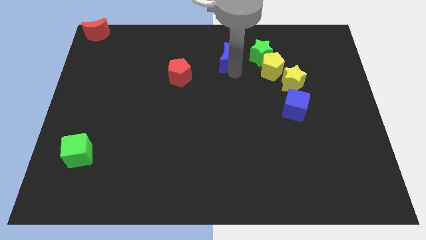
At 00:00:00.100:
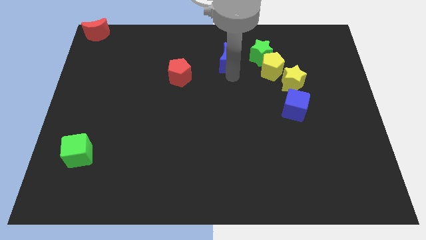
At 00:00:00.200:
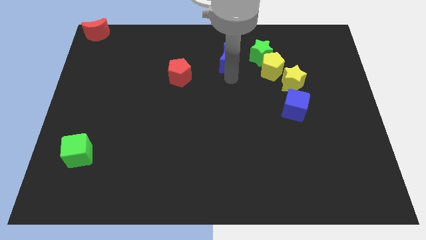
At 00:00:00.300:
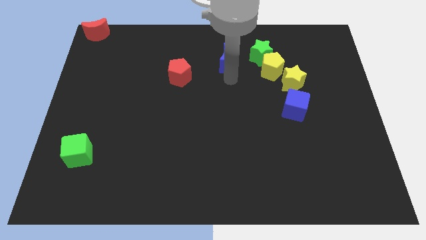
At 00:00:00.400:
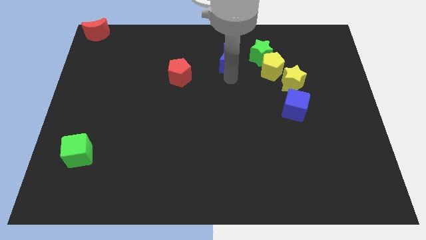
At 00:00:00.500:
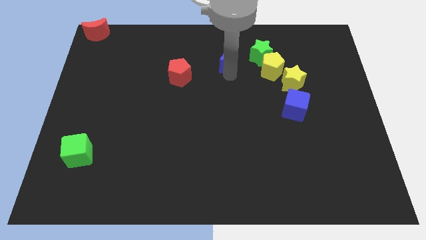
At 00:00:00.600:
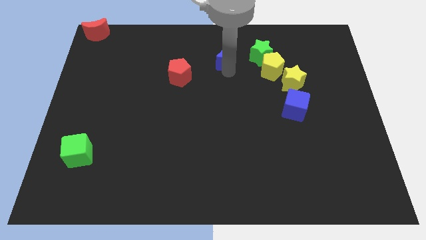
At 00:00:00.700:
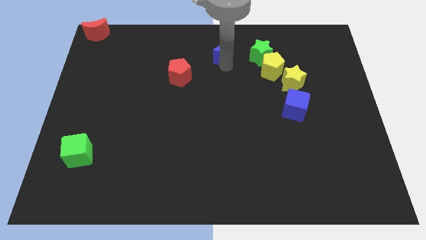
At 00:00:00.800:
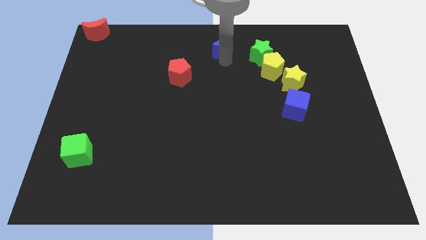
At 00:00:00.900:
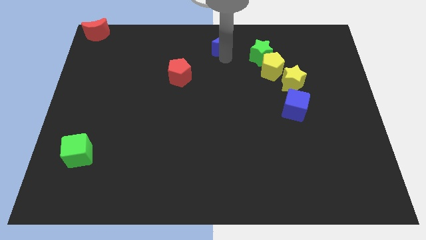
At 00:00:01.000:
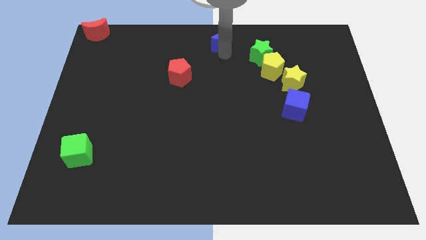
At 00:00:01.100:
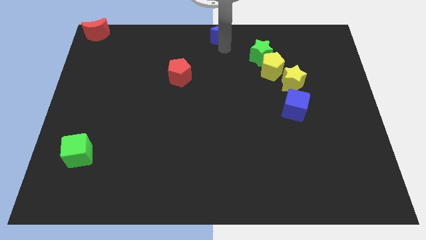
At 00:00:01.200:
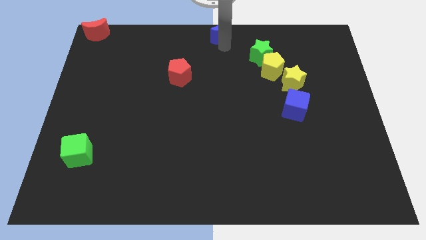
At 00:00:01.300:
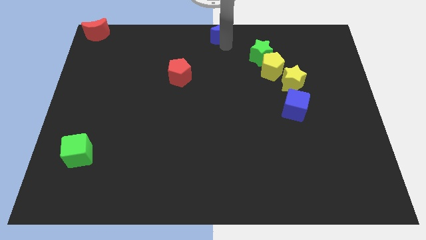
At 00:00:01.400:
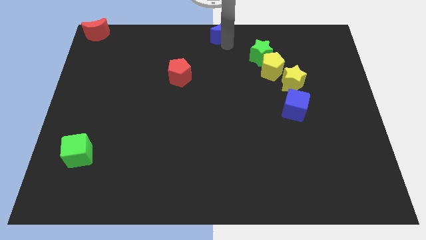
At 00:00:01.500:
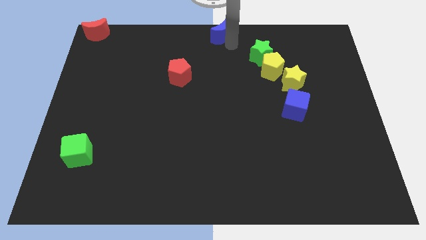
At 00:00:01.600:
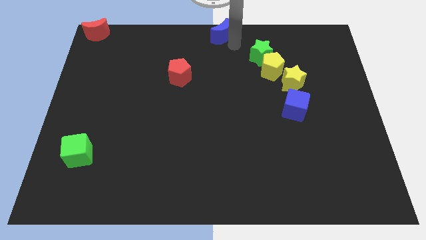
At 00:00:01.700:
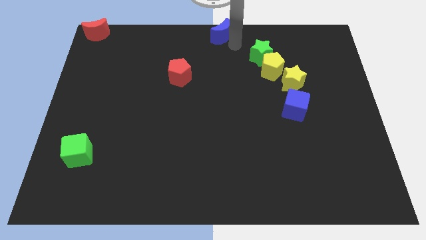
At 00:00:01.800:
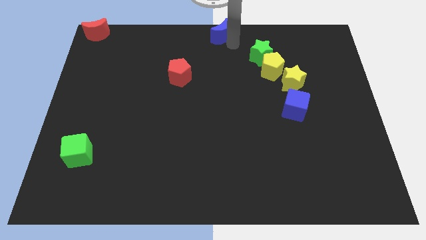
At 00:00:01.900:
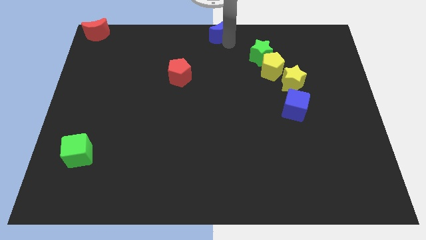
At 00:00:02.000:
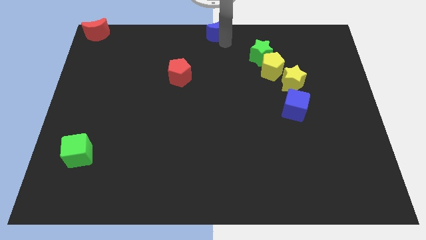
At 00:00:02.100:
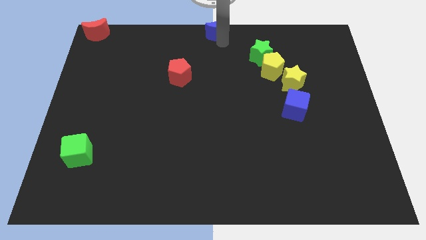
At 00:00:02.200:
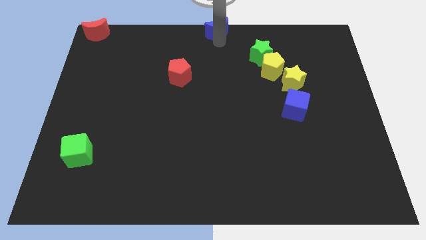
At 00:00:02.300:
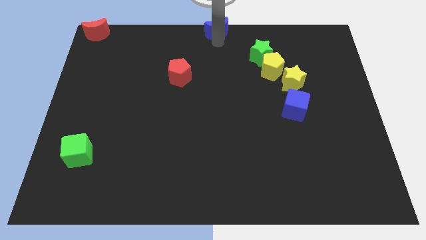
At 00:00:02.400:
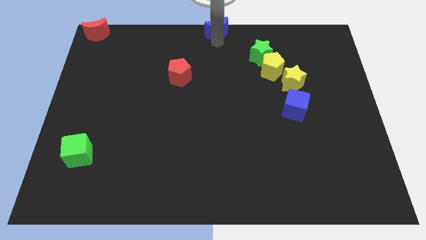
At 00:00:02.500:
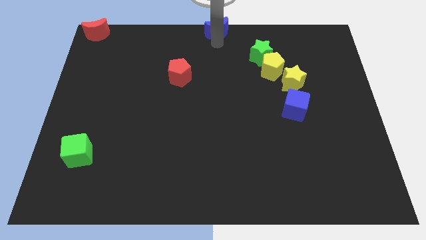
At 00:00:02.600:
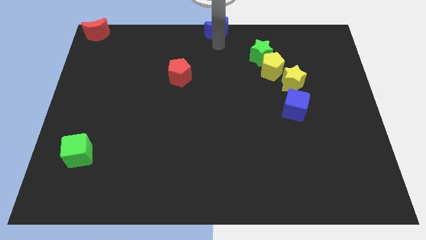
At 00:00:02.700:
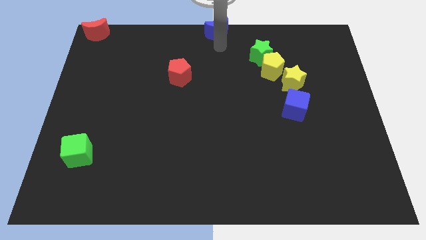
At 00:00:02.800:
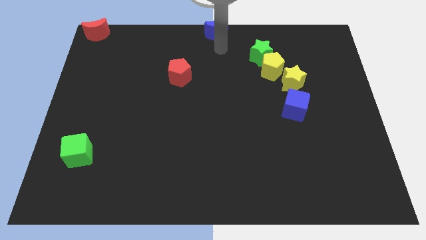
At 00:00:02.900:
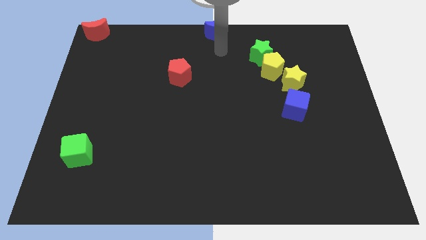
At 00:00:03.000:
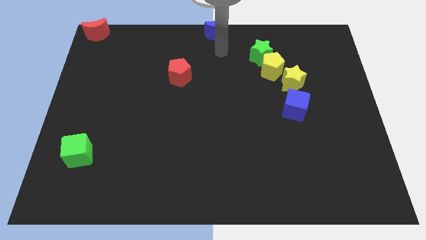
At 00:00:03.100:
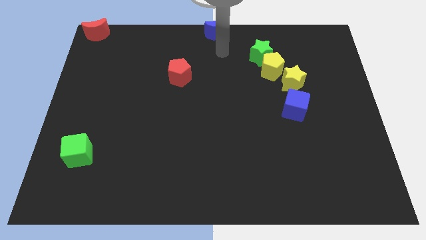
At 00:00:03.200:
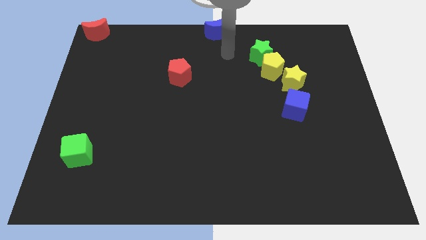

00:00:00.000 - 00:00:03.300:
place the blue moon at the top center of the board

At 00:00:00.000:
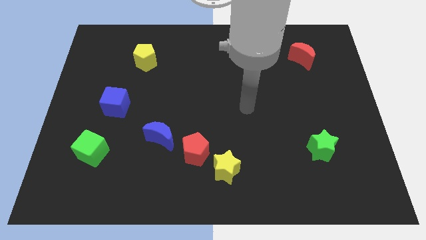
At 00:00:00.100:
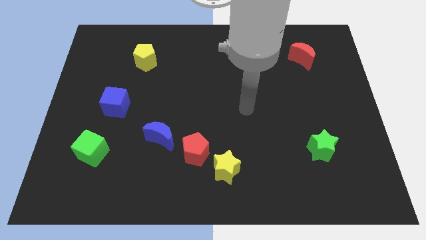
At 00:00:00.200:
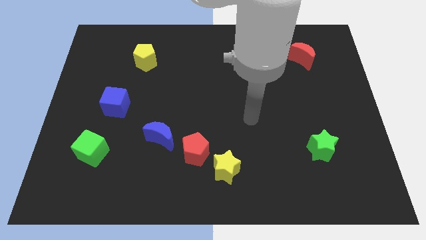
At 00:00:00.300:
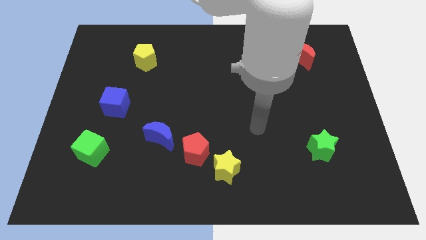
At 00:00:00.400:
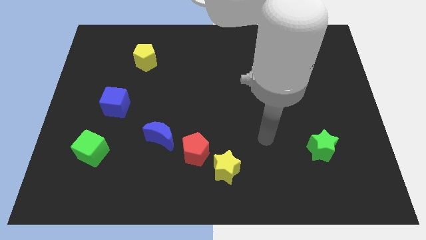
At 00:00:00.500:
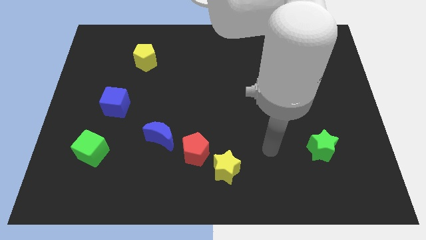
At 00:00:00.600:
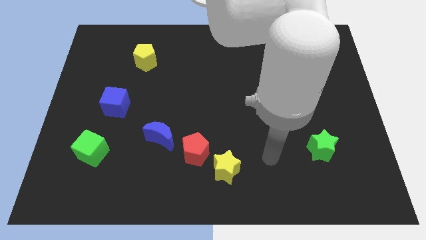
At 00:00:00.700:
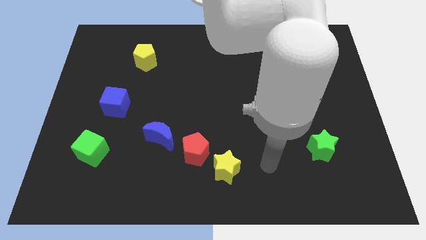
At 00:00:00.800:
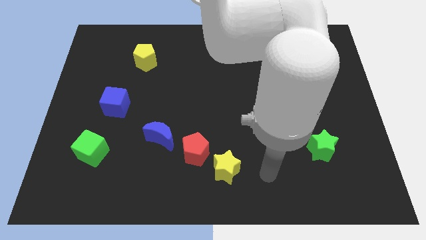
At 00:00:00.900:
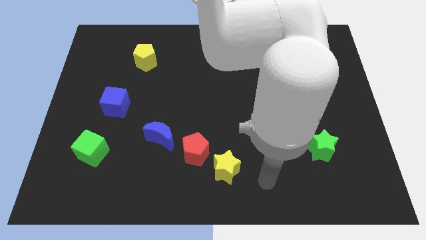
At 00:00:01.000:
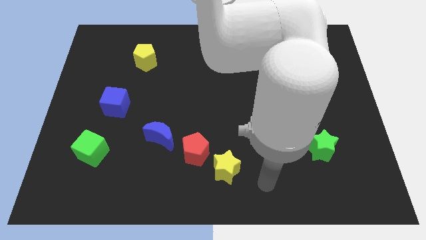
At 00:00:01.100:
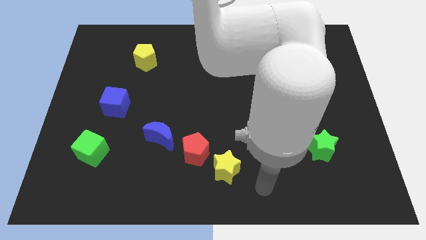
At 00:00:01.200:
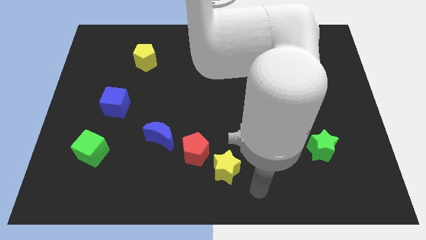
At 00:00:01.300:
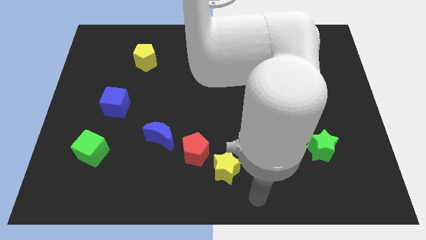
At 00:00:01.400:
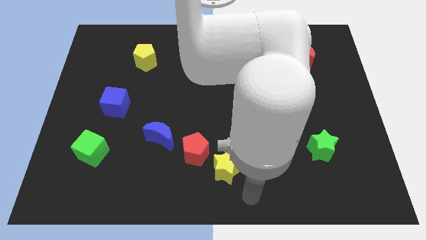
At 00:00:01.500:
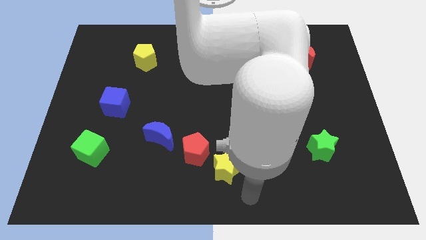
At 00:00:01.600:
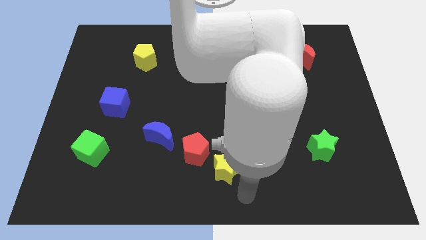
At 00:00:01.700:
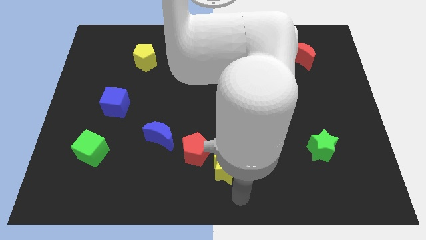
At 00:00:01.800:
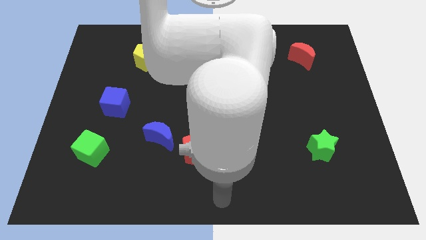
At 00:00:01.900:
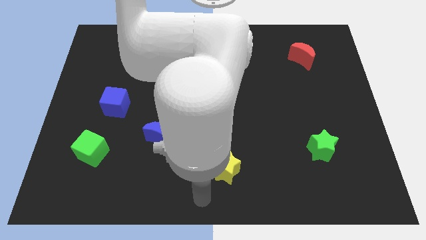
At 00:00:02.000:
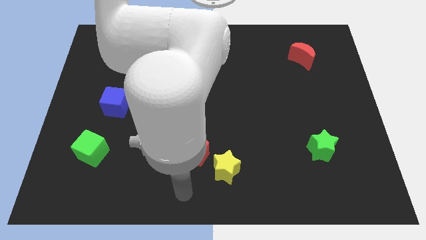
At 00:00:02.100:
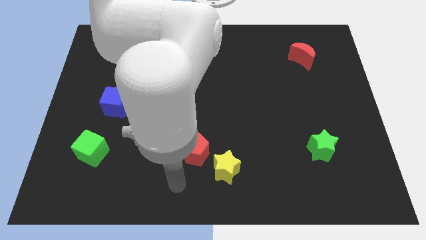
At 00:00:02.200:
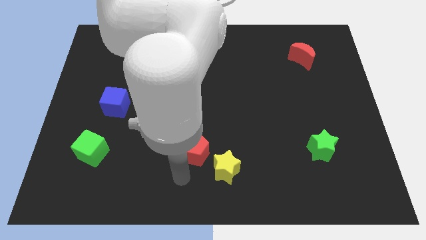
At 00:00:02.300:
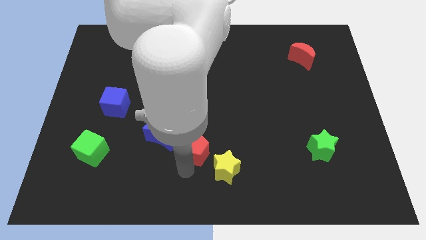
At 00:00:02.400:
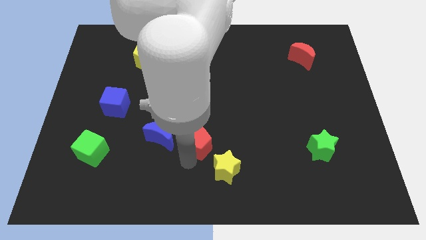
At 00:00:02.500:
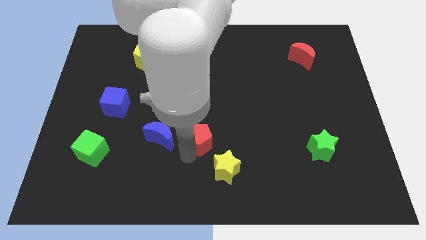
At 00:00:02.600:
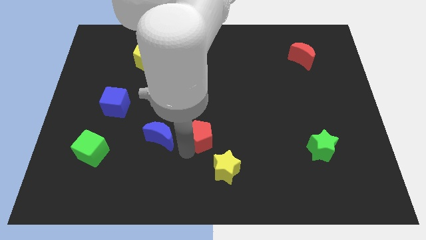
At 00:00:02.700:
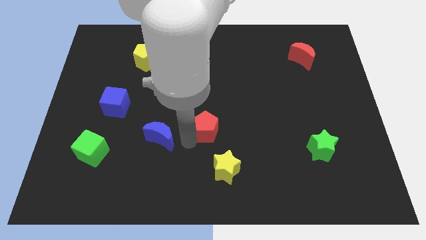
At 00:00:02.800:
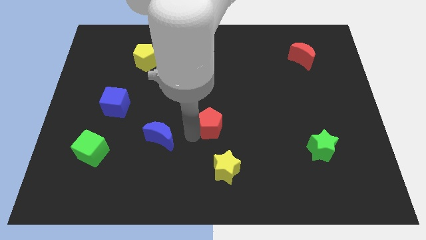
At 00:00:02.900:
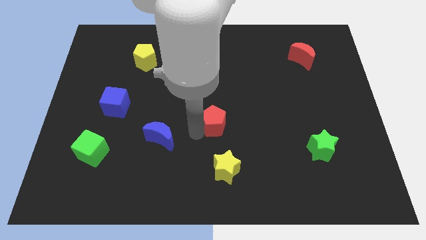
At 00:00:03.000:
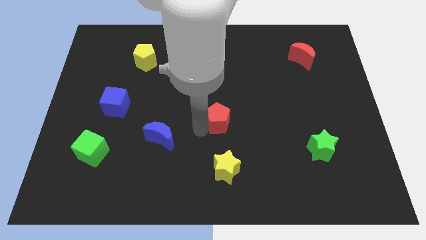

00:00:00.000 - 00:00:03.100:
move red pentagon to the top left of yellow star

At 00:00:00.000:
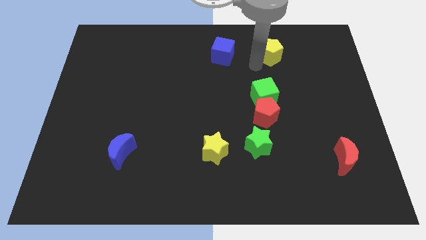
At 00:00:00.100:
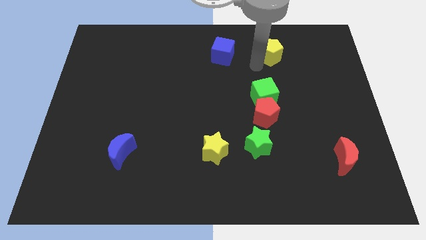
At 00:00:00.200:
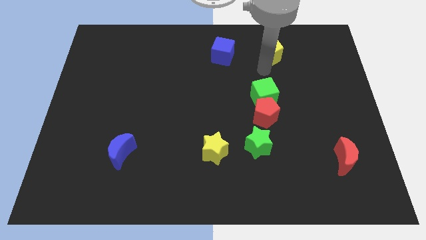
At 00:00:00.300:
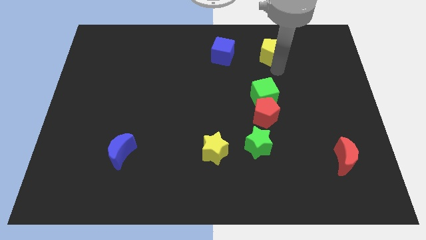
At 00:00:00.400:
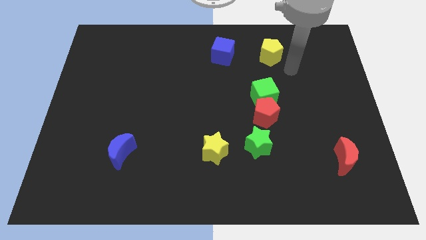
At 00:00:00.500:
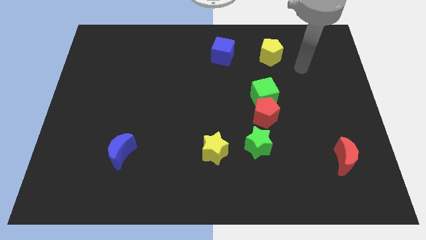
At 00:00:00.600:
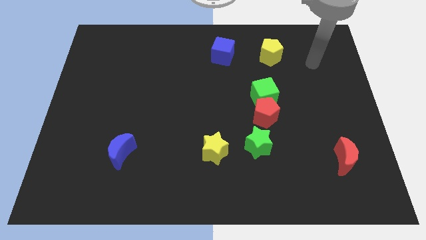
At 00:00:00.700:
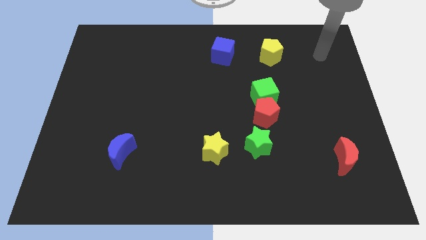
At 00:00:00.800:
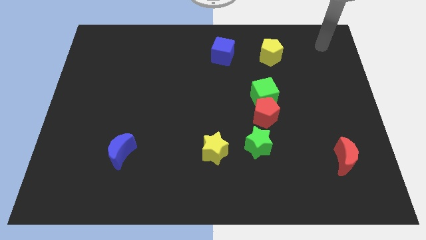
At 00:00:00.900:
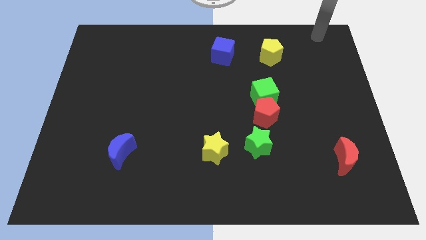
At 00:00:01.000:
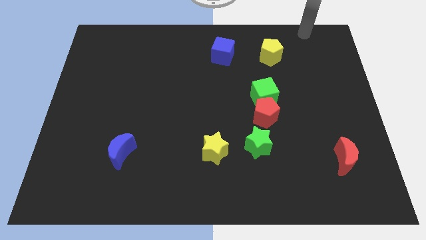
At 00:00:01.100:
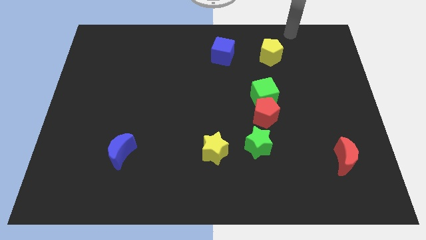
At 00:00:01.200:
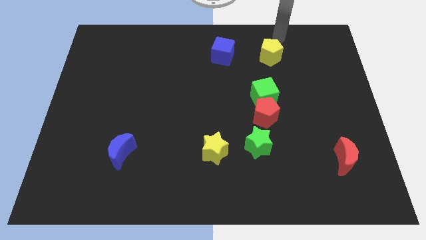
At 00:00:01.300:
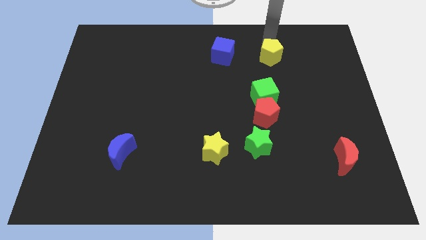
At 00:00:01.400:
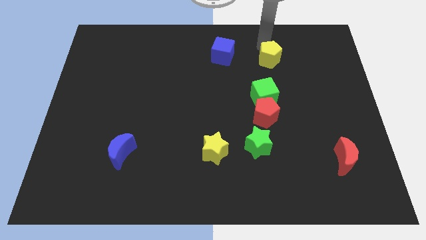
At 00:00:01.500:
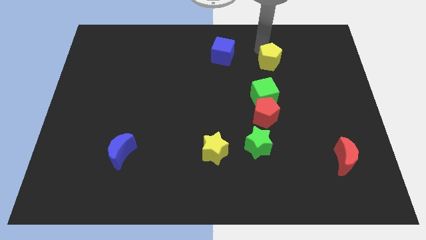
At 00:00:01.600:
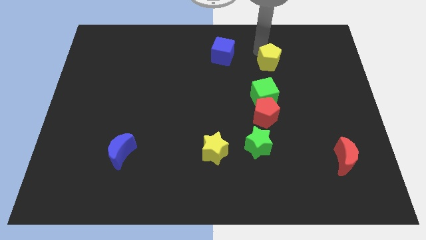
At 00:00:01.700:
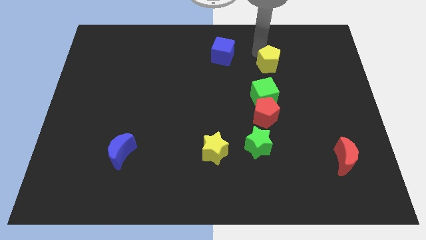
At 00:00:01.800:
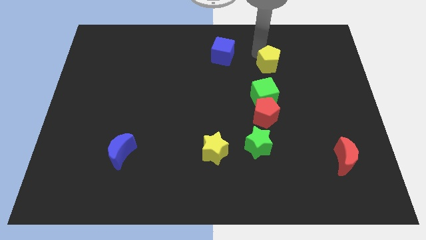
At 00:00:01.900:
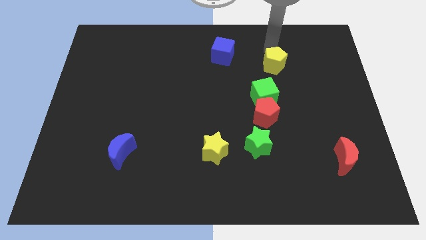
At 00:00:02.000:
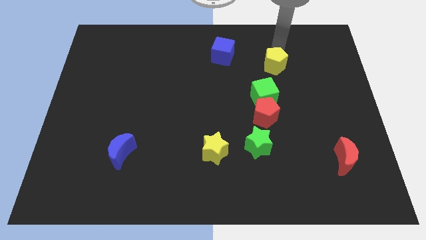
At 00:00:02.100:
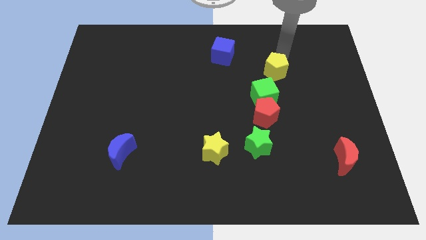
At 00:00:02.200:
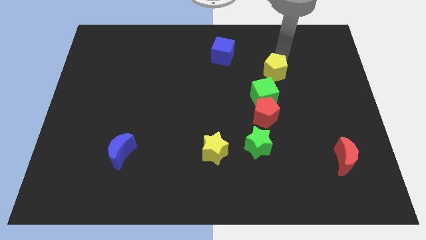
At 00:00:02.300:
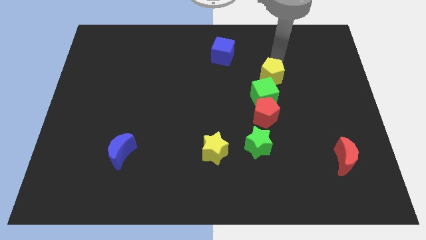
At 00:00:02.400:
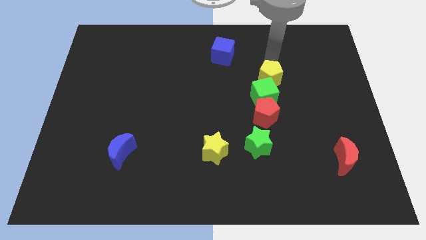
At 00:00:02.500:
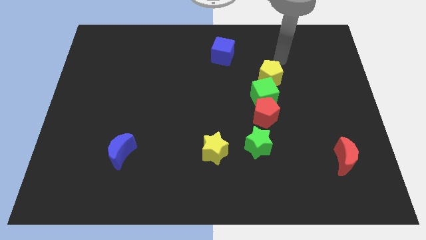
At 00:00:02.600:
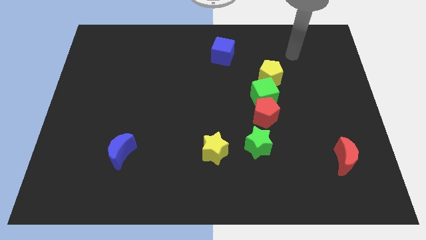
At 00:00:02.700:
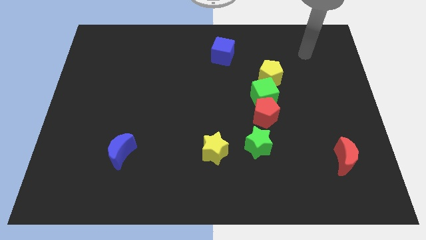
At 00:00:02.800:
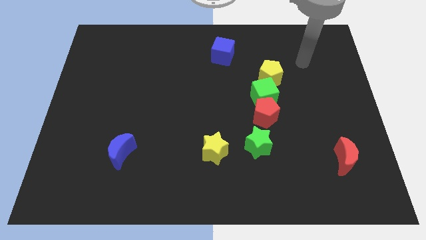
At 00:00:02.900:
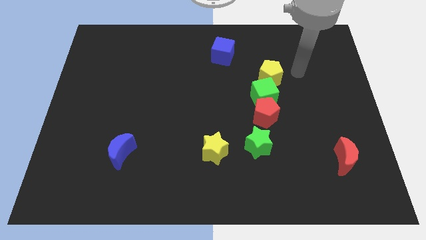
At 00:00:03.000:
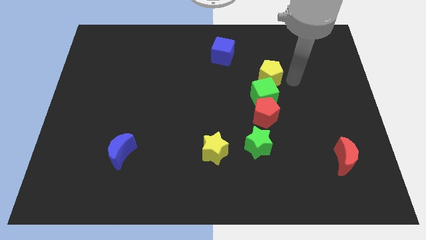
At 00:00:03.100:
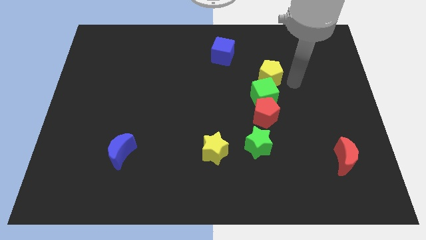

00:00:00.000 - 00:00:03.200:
push the yellow pentagon to the top of green cube
